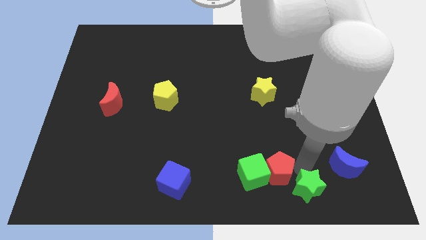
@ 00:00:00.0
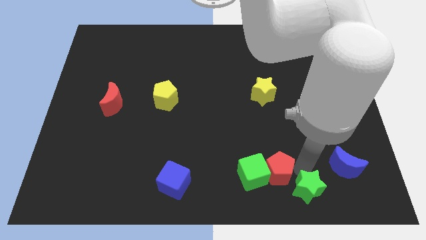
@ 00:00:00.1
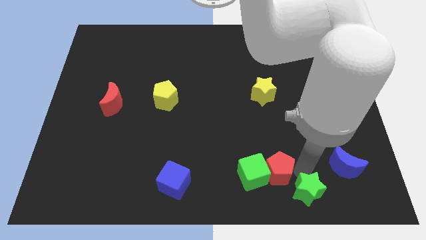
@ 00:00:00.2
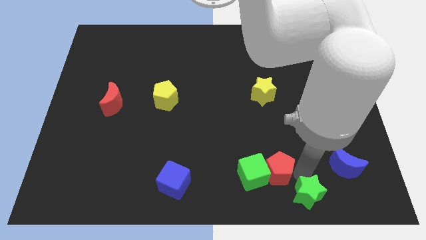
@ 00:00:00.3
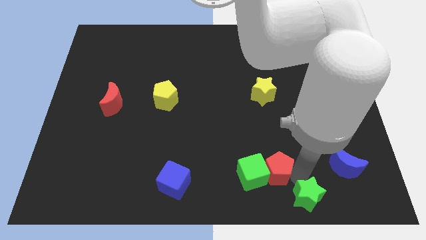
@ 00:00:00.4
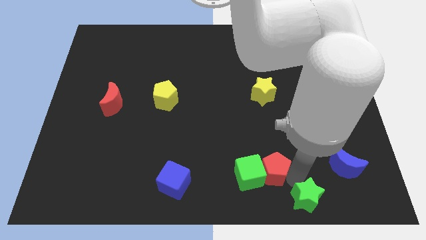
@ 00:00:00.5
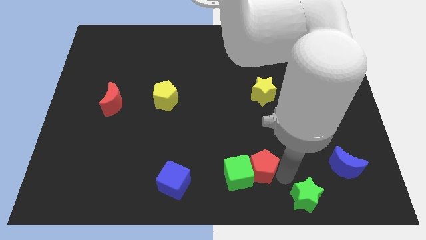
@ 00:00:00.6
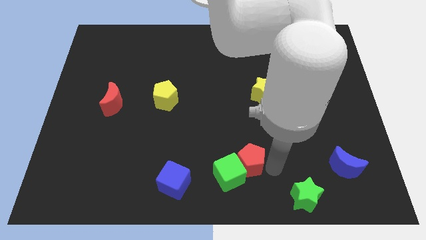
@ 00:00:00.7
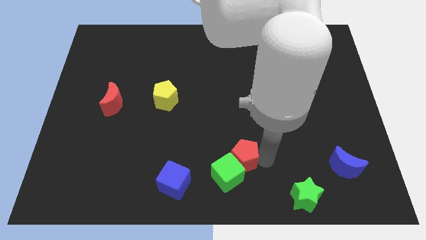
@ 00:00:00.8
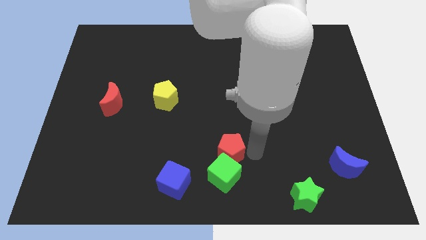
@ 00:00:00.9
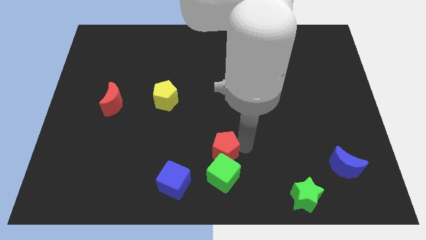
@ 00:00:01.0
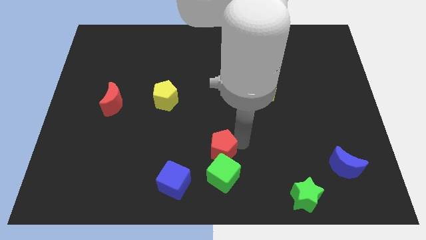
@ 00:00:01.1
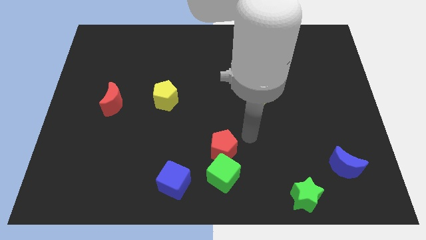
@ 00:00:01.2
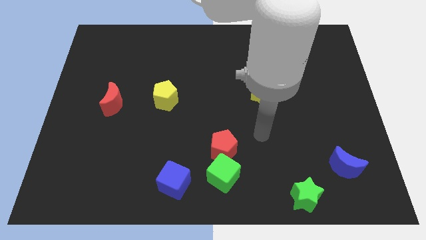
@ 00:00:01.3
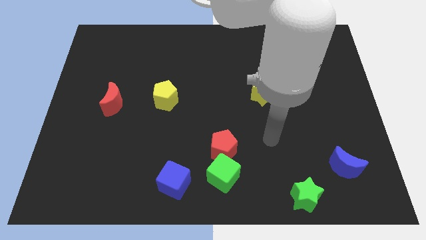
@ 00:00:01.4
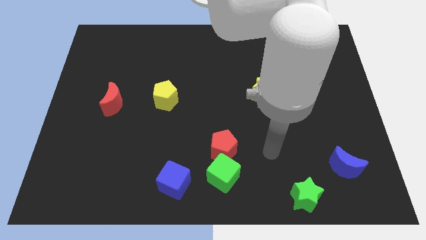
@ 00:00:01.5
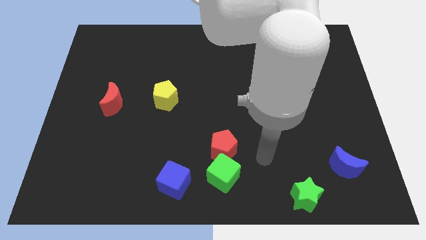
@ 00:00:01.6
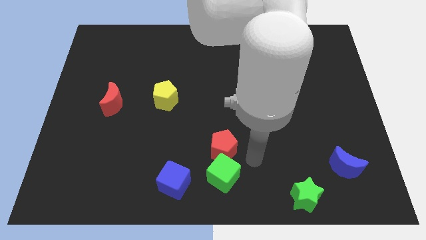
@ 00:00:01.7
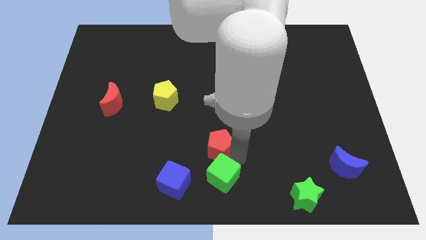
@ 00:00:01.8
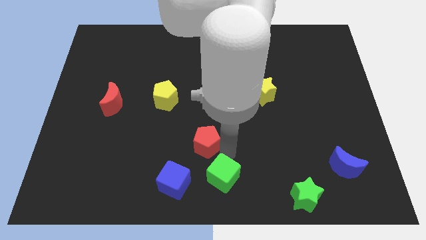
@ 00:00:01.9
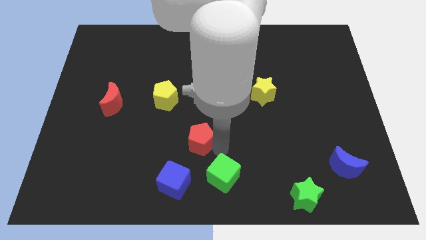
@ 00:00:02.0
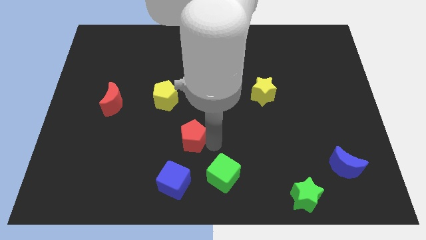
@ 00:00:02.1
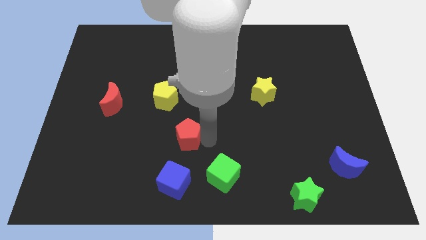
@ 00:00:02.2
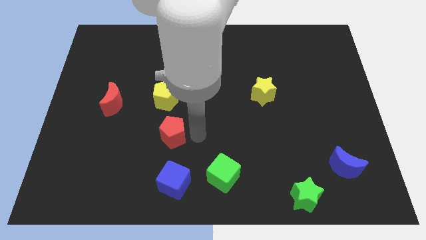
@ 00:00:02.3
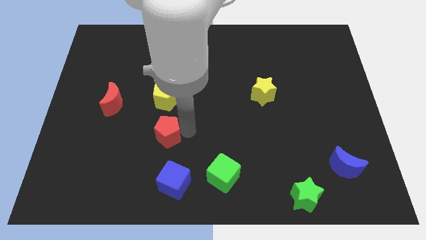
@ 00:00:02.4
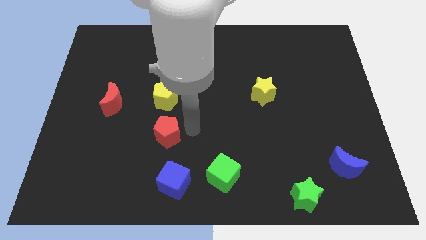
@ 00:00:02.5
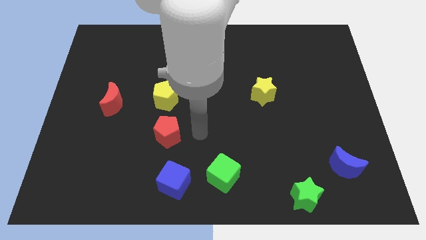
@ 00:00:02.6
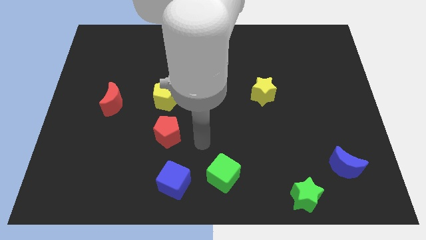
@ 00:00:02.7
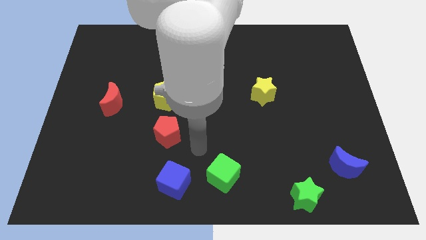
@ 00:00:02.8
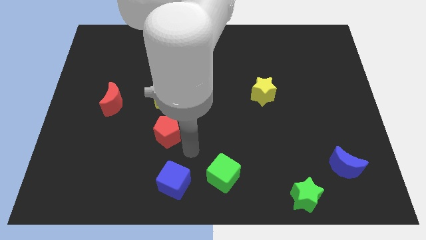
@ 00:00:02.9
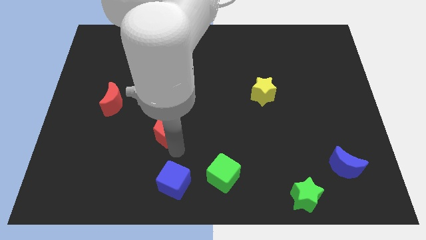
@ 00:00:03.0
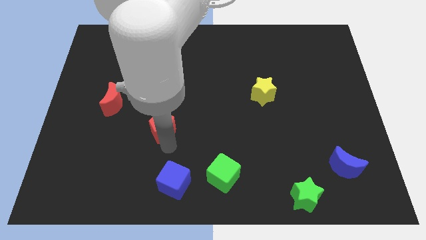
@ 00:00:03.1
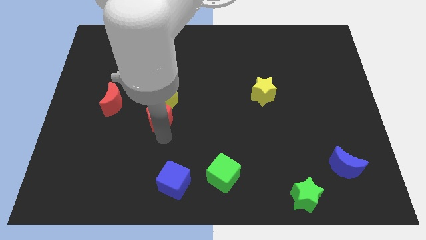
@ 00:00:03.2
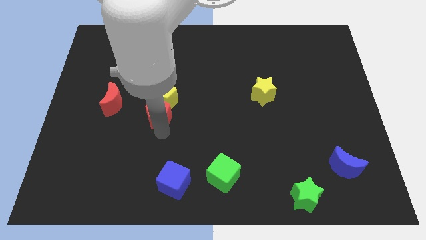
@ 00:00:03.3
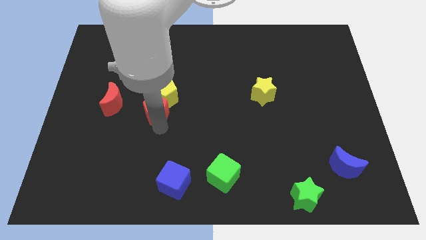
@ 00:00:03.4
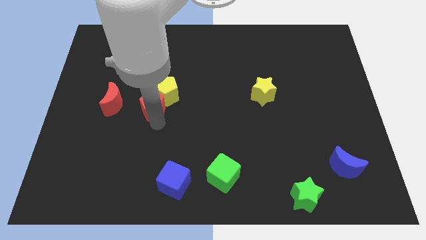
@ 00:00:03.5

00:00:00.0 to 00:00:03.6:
push the red pentagon into the bottom of the yellow pentagon

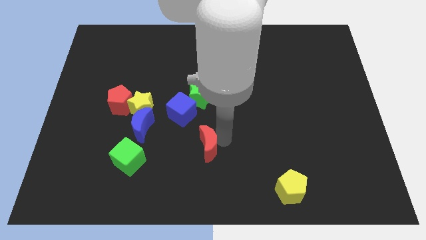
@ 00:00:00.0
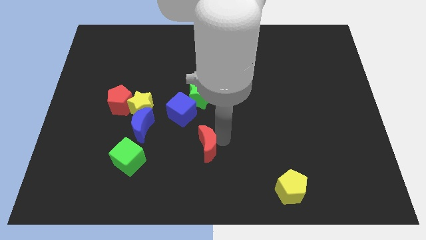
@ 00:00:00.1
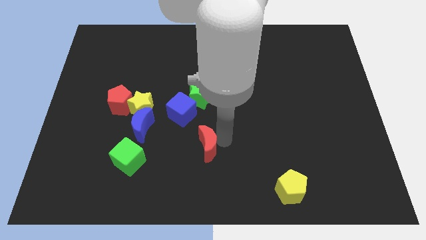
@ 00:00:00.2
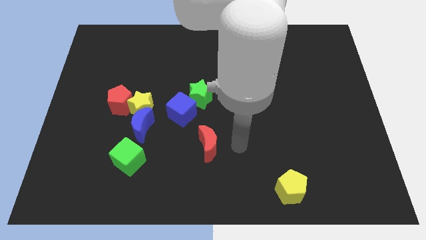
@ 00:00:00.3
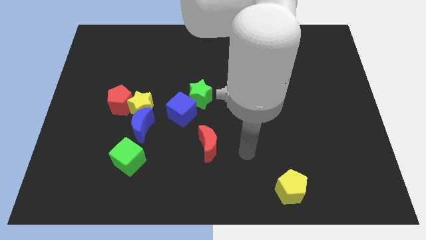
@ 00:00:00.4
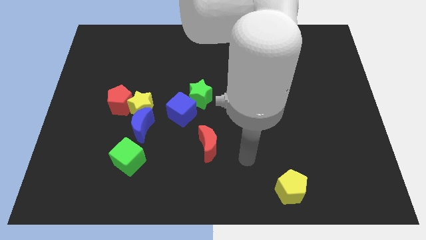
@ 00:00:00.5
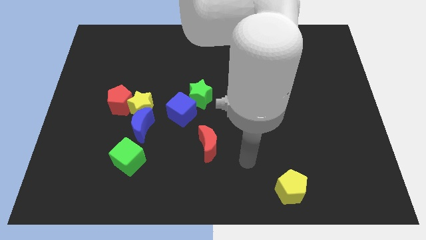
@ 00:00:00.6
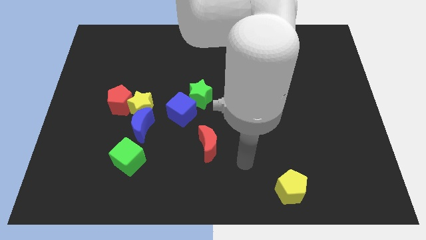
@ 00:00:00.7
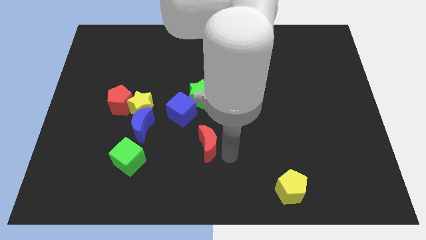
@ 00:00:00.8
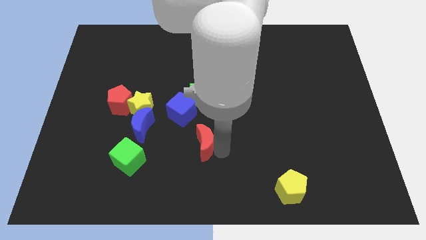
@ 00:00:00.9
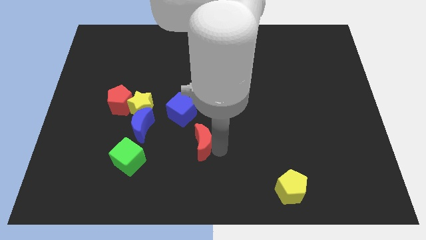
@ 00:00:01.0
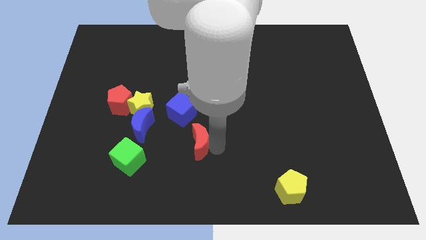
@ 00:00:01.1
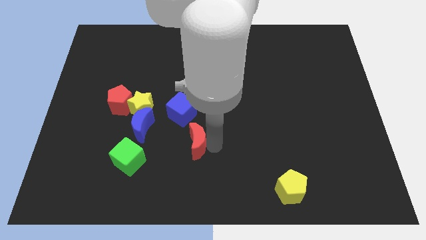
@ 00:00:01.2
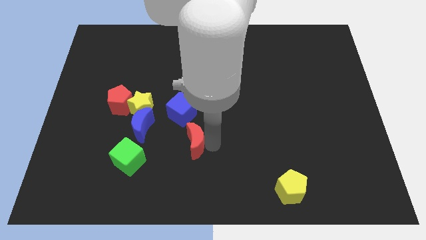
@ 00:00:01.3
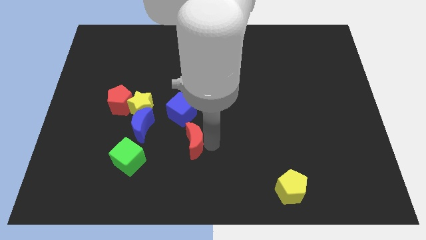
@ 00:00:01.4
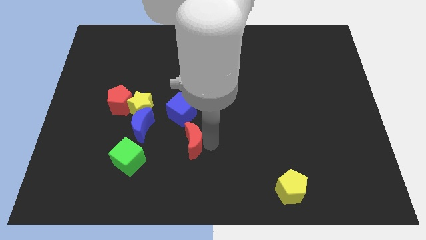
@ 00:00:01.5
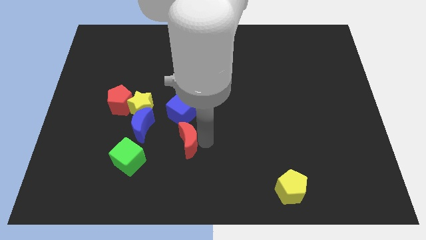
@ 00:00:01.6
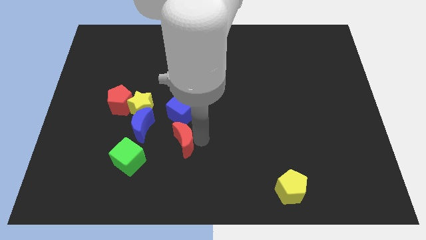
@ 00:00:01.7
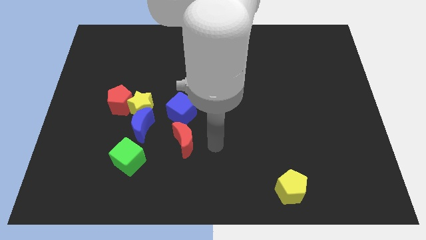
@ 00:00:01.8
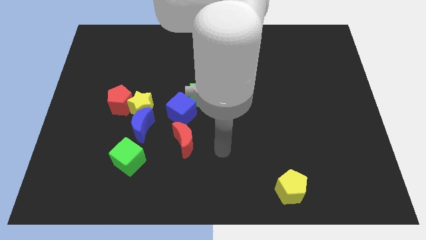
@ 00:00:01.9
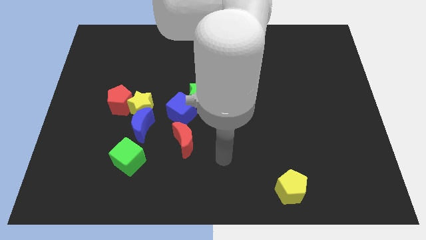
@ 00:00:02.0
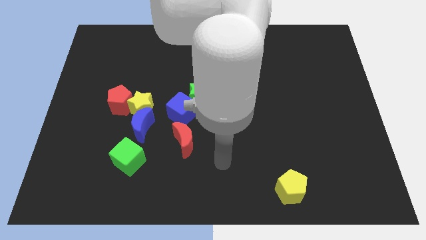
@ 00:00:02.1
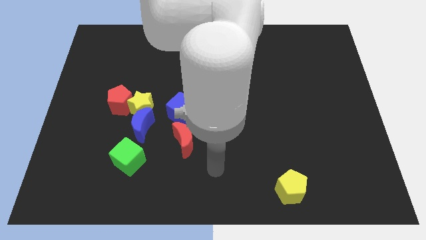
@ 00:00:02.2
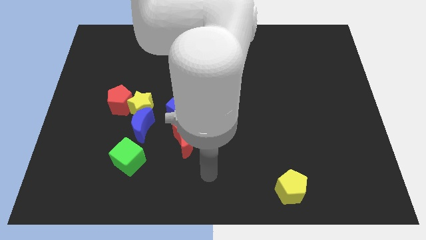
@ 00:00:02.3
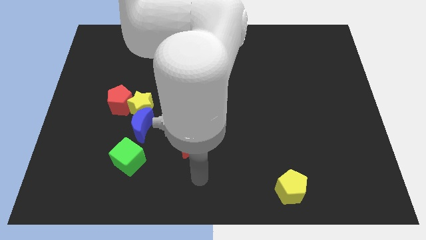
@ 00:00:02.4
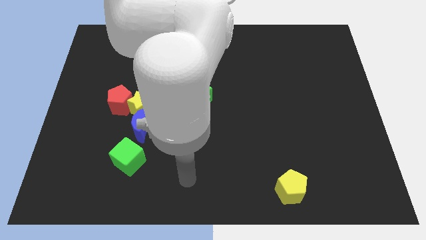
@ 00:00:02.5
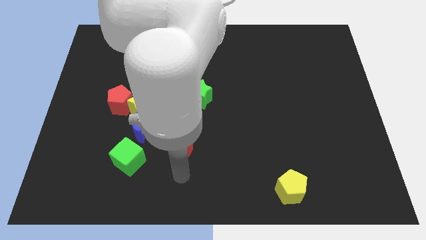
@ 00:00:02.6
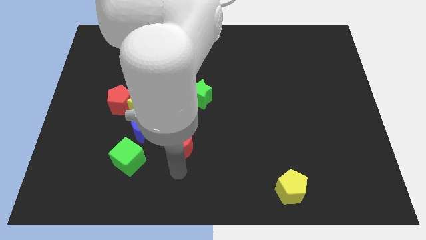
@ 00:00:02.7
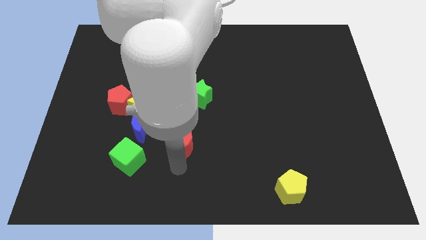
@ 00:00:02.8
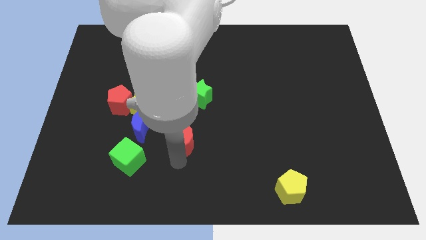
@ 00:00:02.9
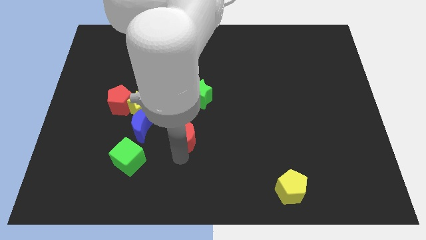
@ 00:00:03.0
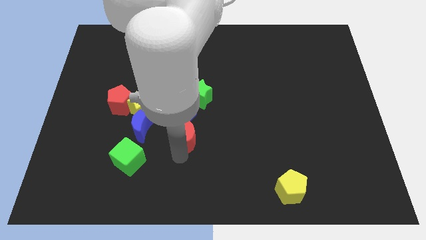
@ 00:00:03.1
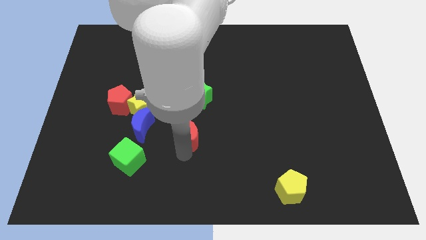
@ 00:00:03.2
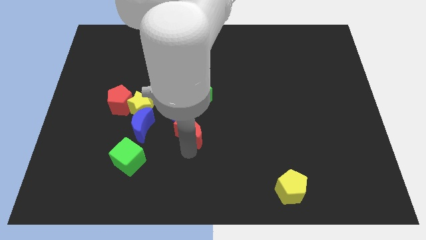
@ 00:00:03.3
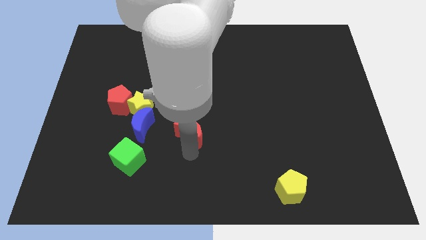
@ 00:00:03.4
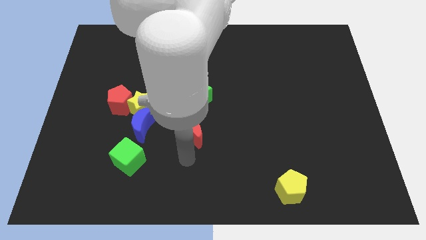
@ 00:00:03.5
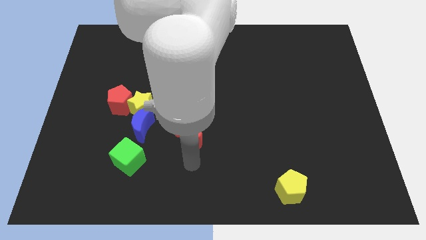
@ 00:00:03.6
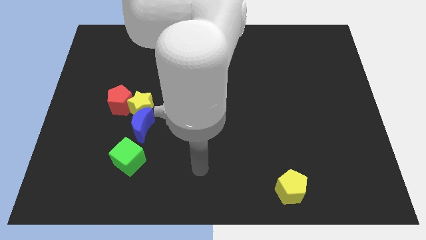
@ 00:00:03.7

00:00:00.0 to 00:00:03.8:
place red moon below blue cube

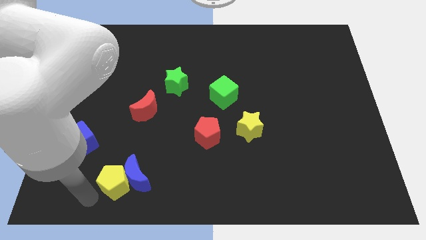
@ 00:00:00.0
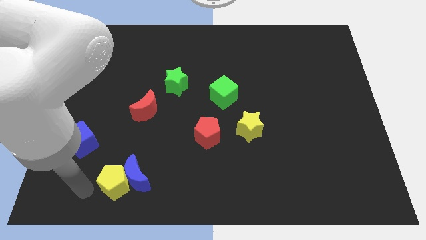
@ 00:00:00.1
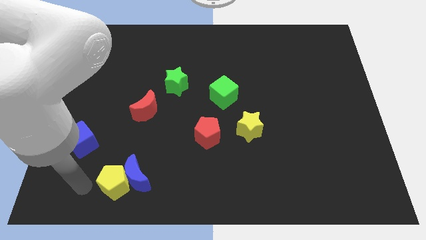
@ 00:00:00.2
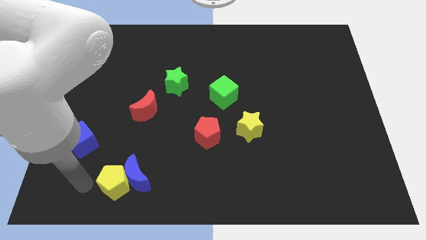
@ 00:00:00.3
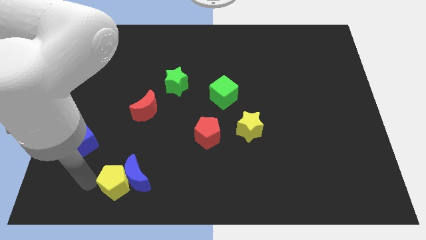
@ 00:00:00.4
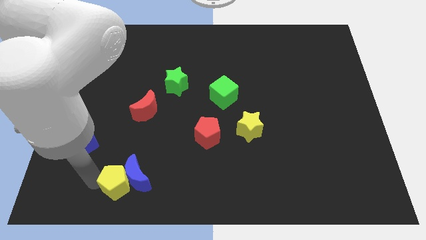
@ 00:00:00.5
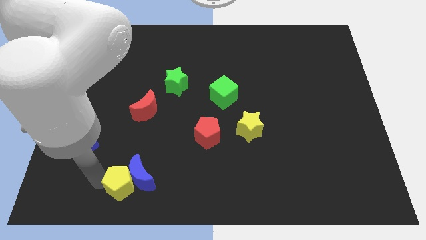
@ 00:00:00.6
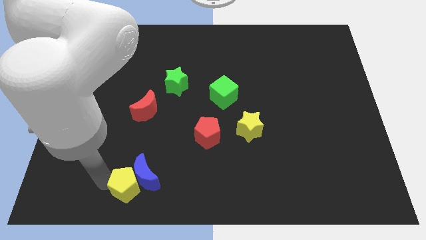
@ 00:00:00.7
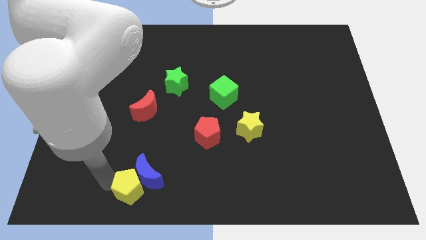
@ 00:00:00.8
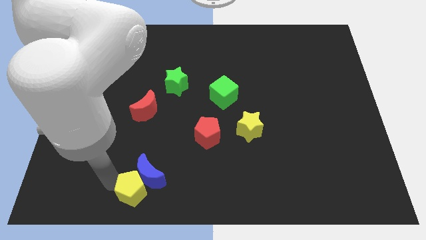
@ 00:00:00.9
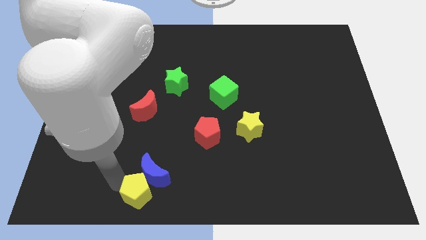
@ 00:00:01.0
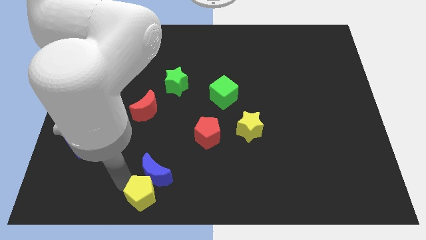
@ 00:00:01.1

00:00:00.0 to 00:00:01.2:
push yellow pentagon slightly towards right side

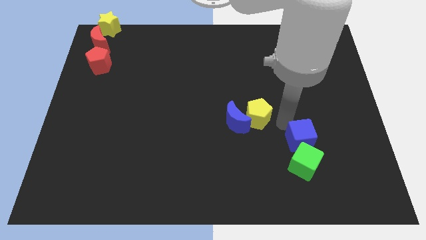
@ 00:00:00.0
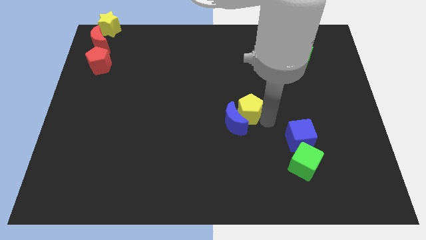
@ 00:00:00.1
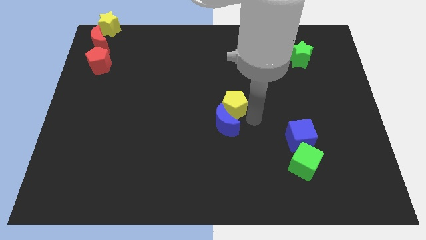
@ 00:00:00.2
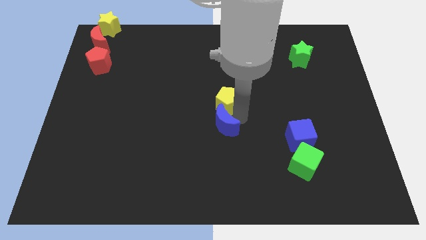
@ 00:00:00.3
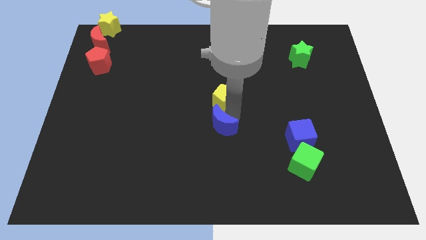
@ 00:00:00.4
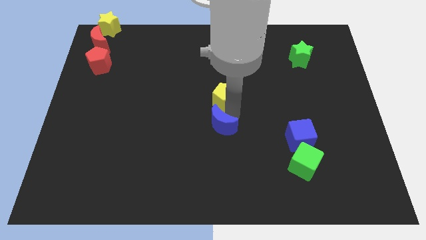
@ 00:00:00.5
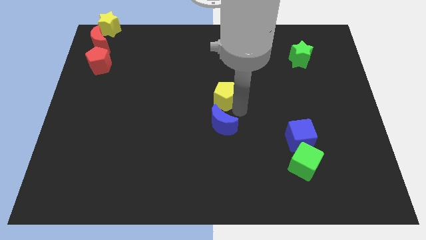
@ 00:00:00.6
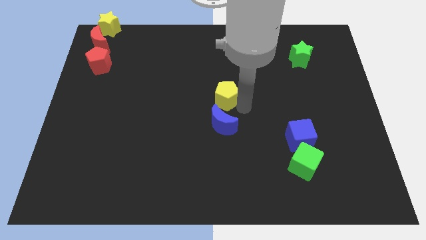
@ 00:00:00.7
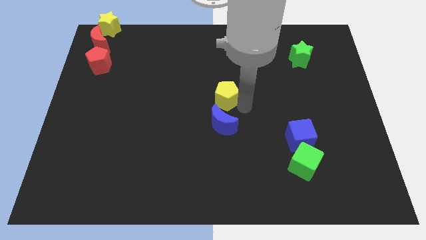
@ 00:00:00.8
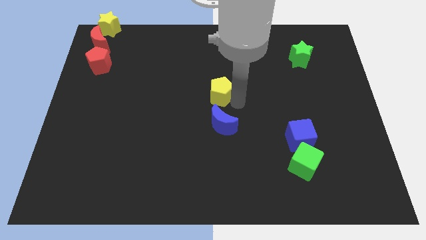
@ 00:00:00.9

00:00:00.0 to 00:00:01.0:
push yellow pentagon above blue crescent
